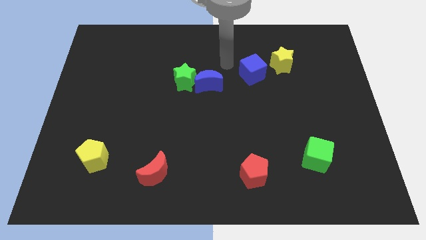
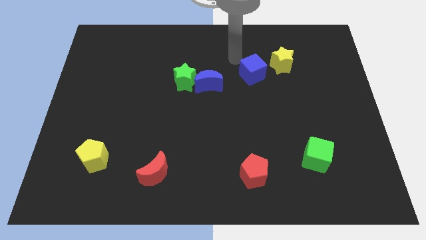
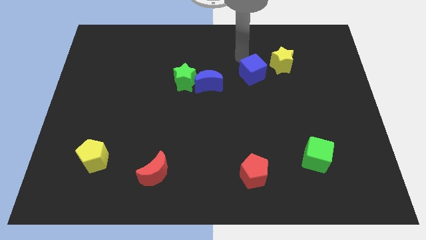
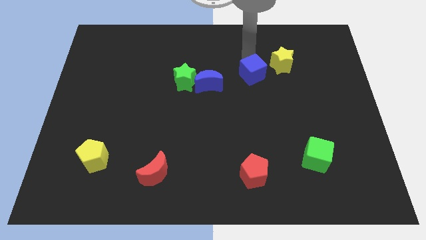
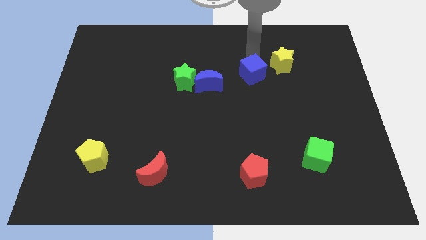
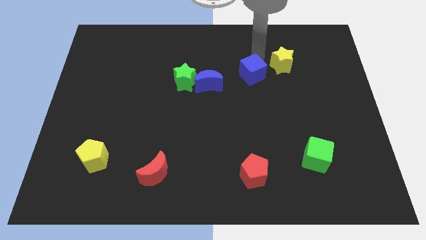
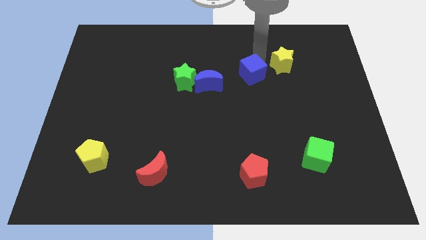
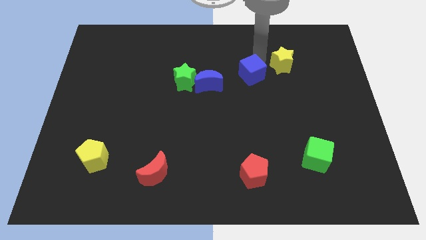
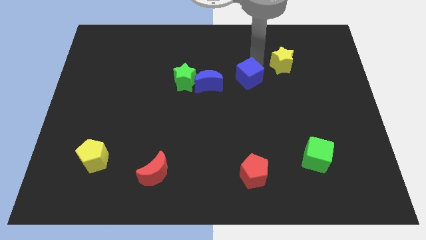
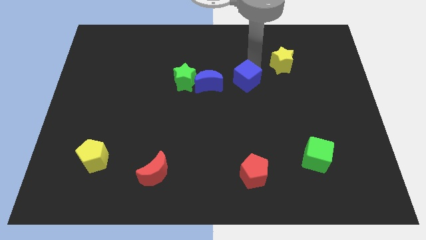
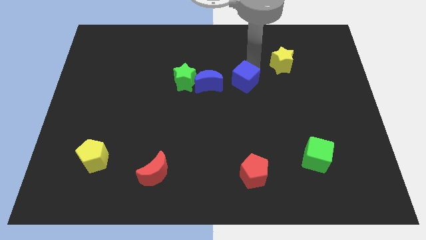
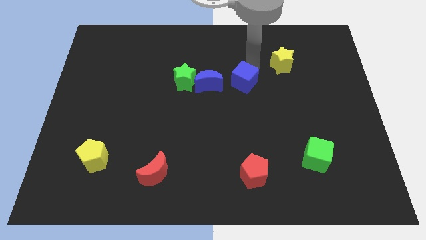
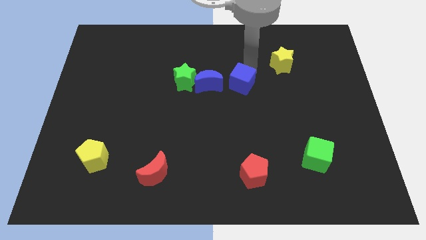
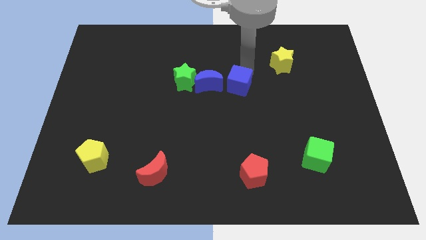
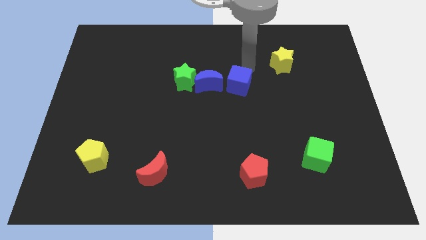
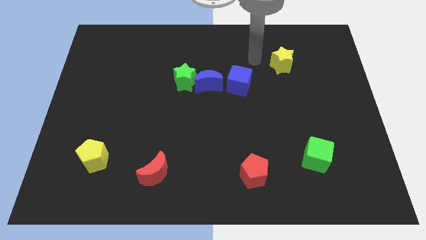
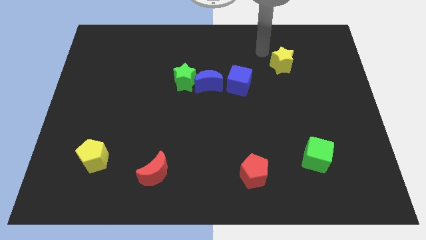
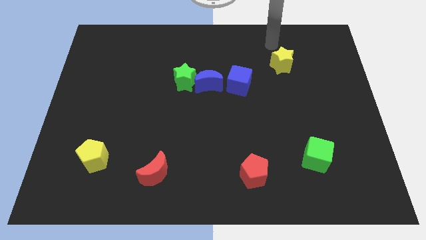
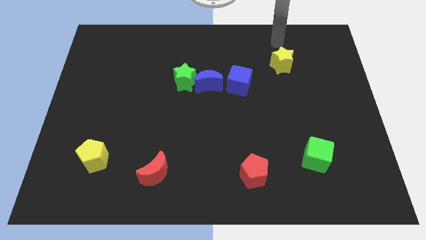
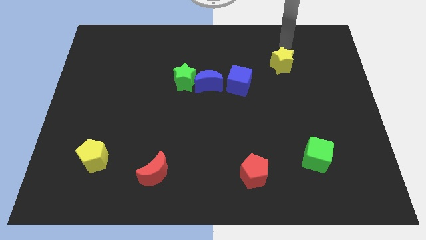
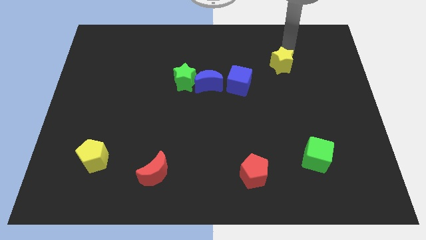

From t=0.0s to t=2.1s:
push the blue cube to the right of the blue moon

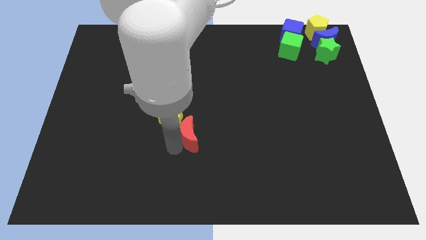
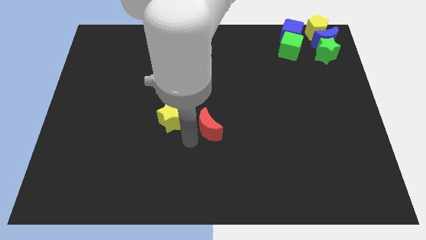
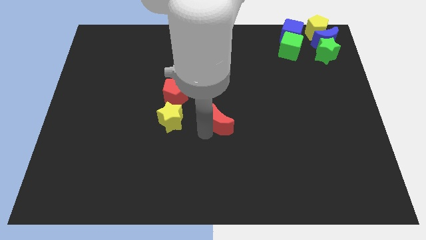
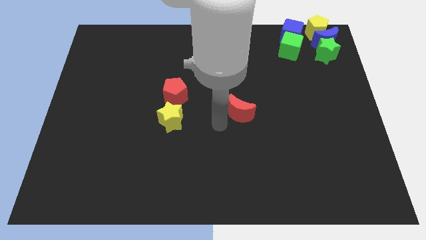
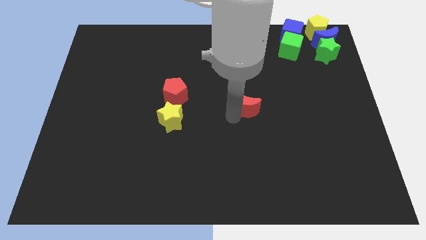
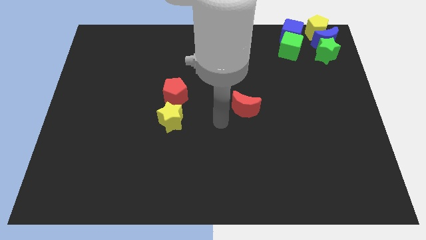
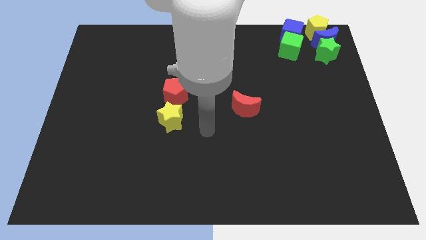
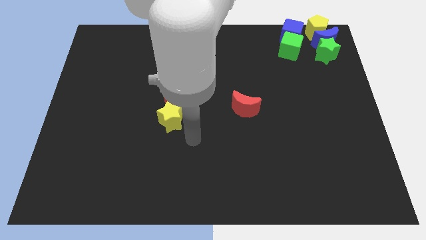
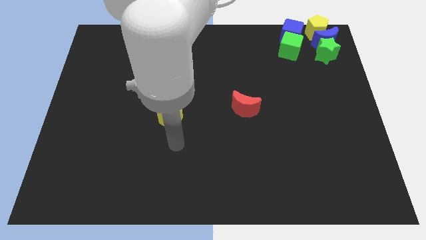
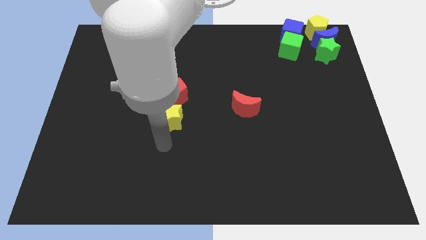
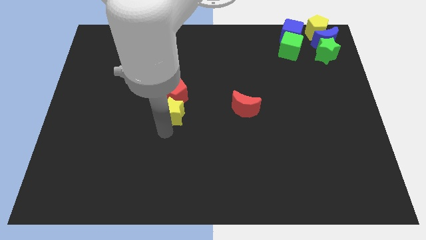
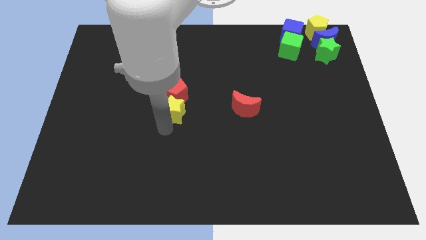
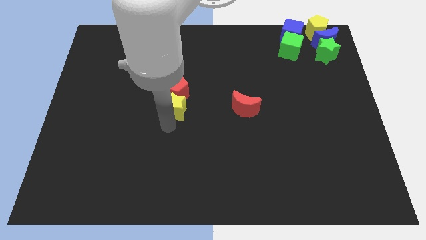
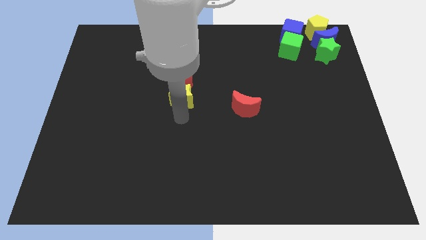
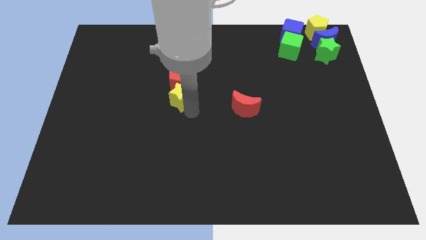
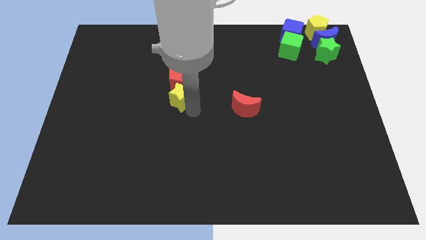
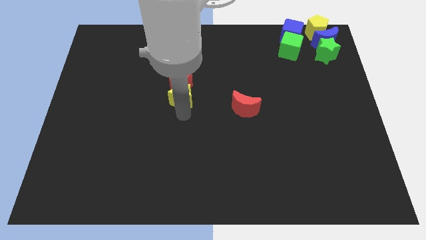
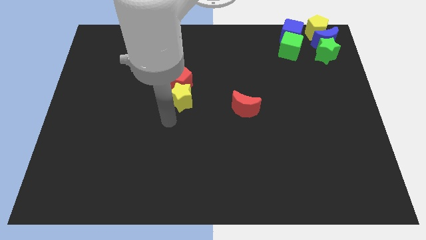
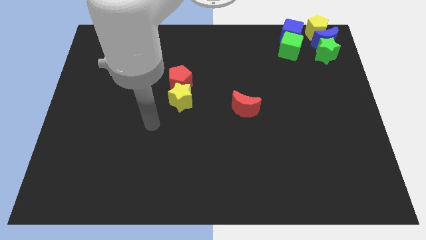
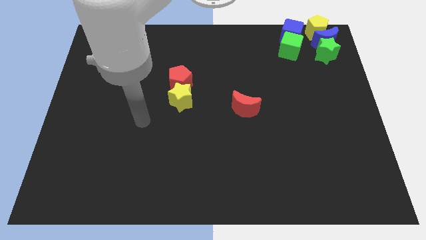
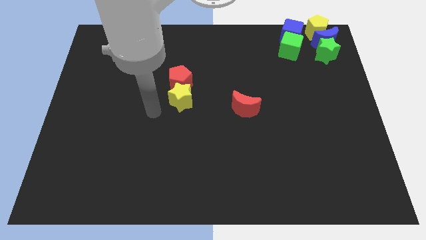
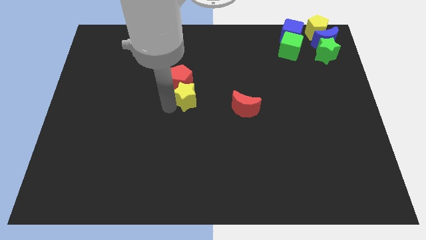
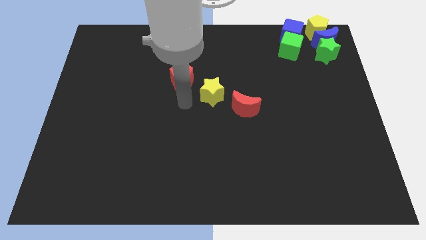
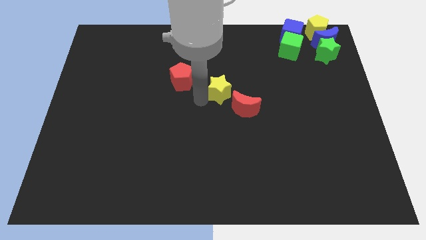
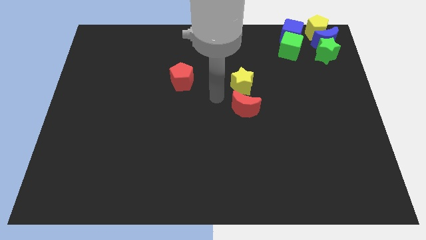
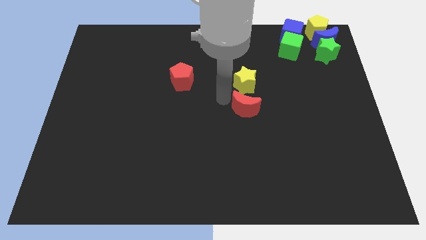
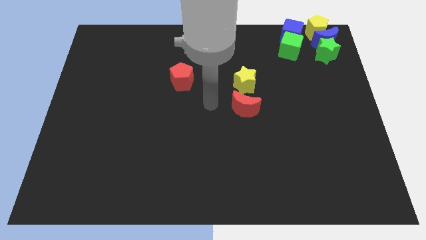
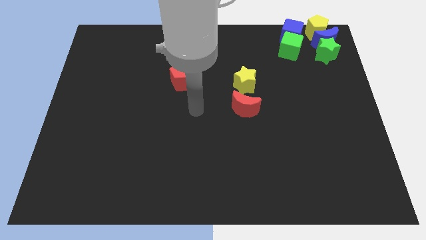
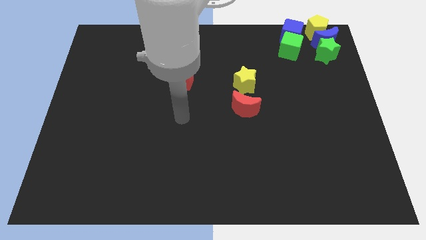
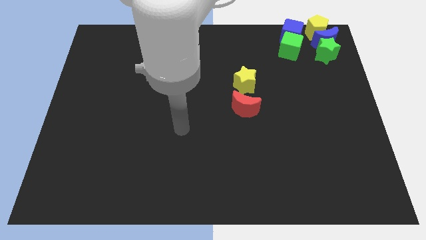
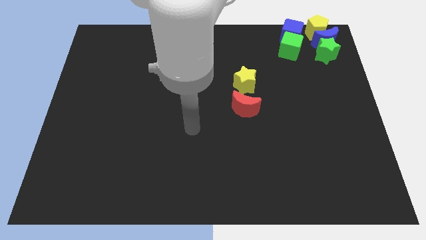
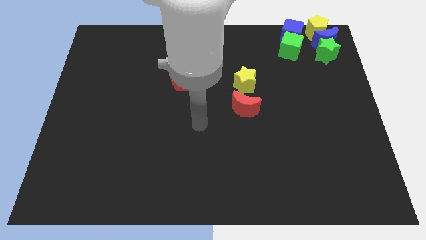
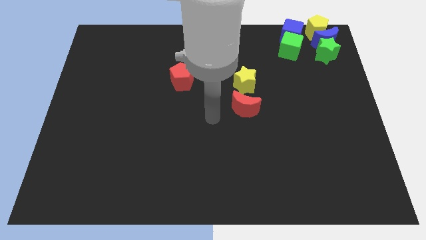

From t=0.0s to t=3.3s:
push the red crescent along with the yellow star to the right of the red pentagon

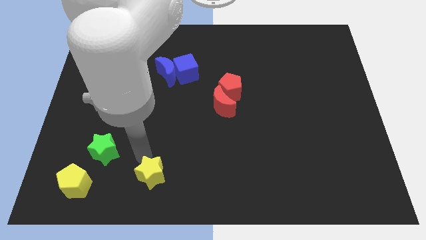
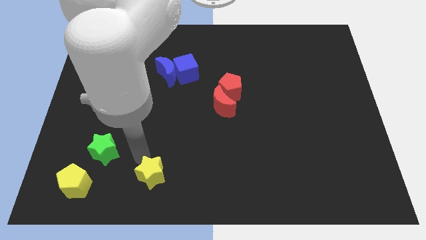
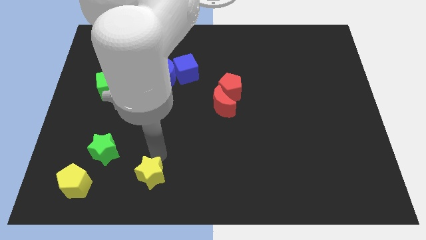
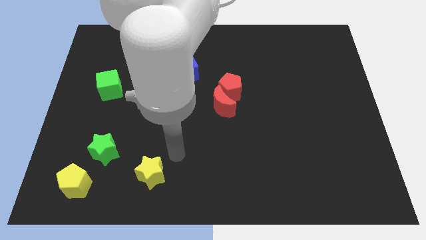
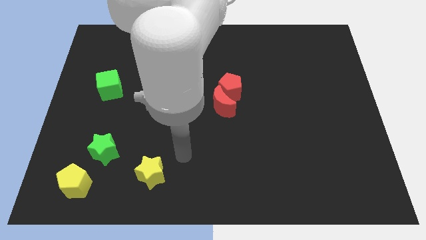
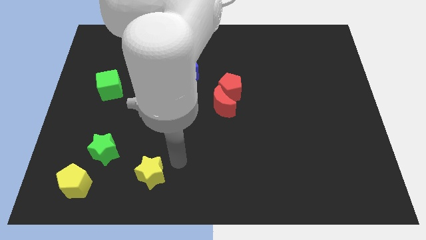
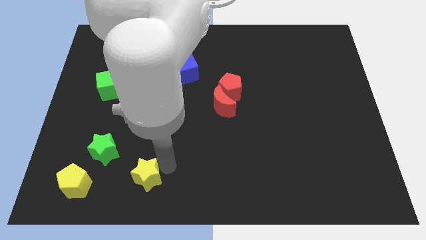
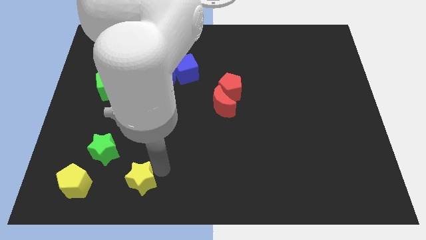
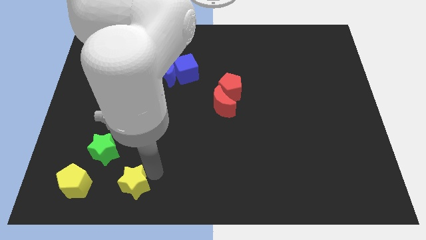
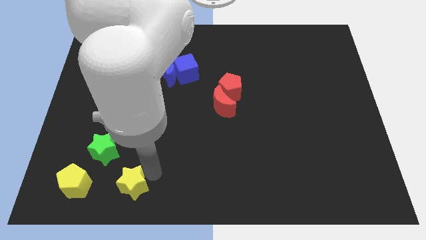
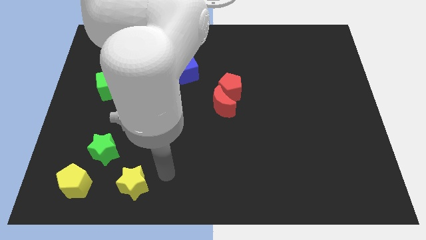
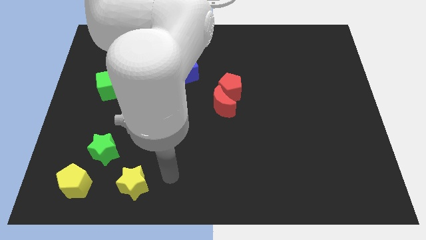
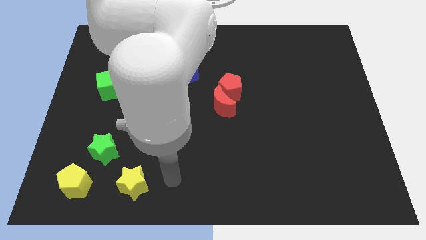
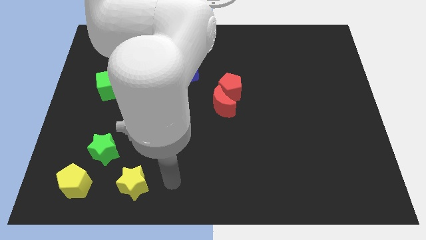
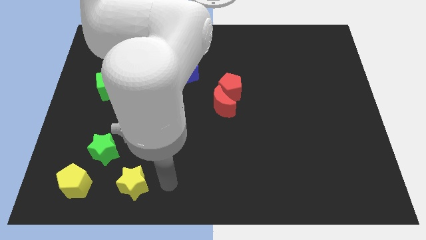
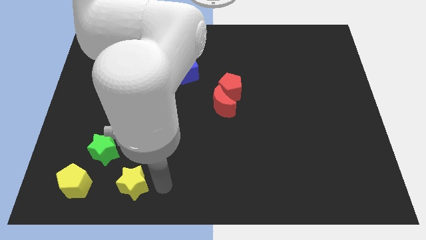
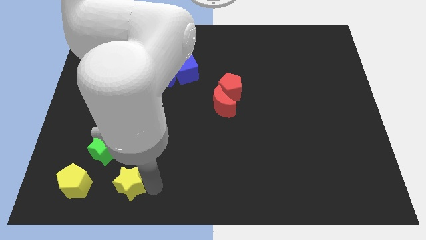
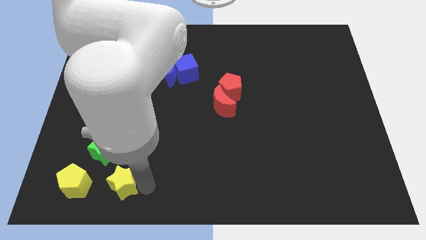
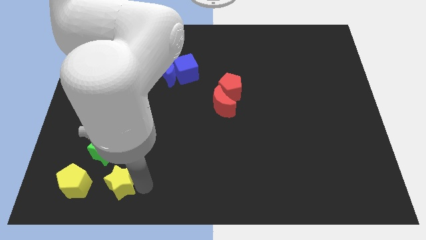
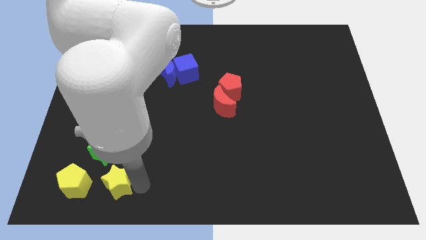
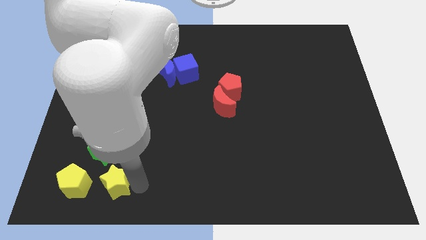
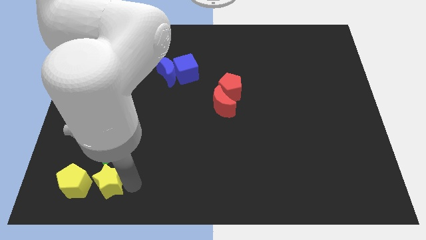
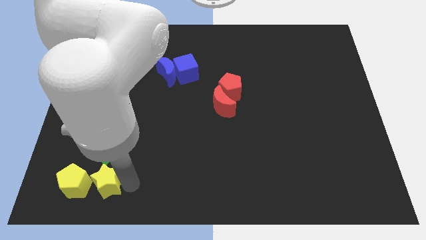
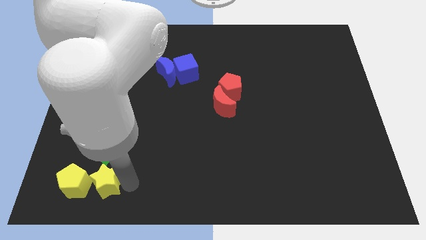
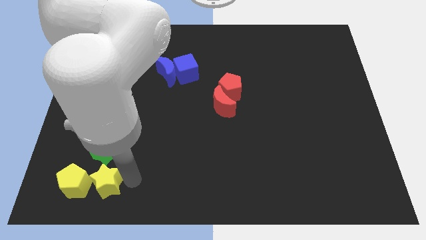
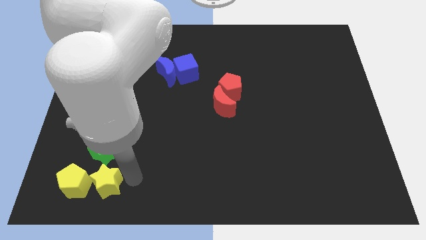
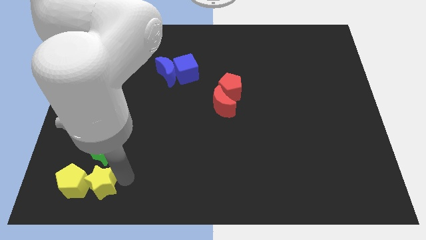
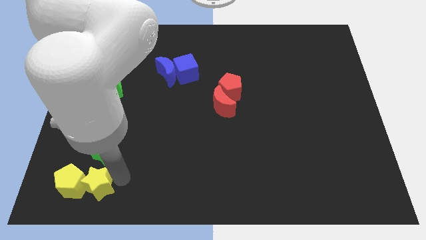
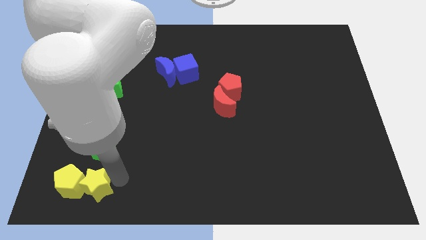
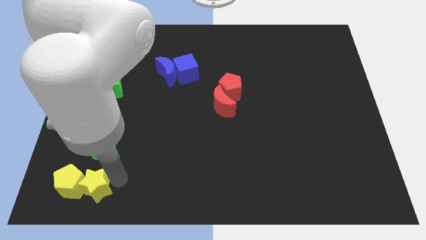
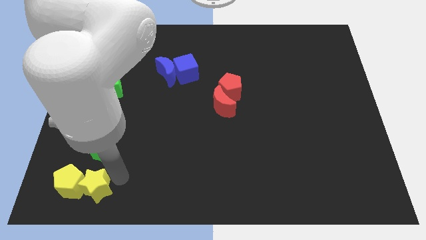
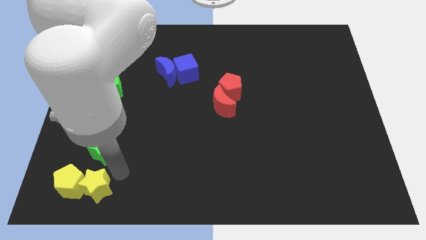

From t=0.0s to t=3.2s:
slide the yellow star to the right side of the yellow pentagon

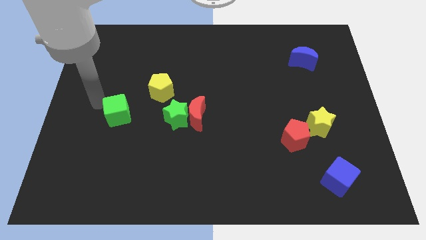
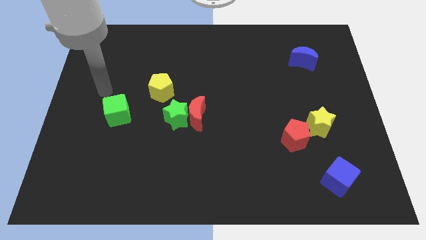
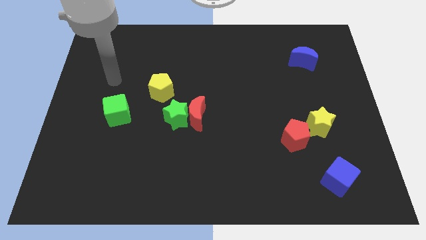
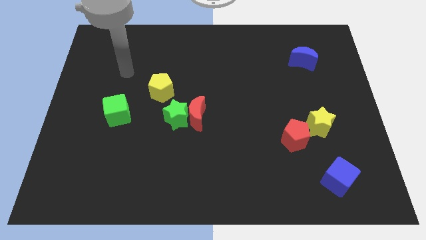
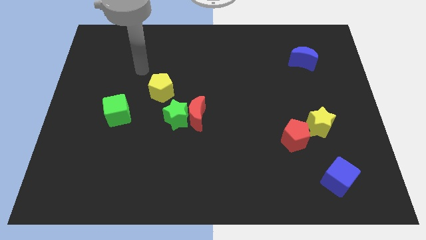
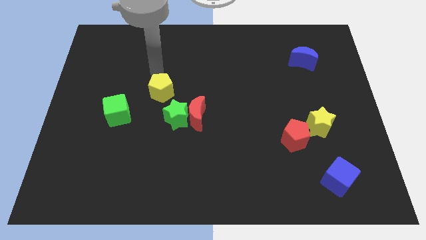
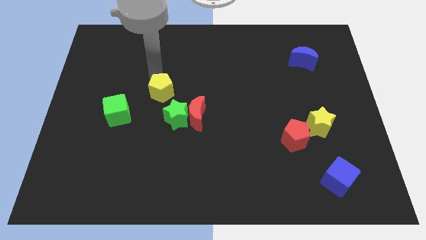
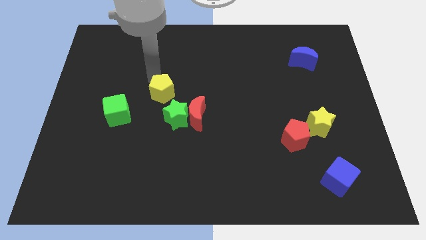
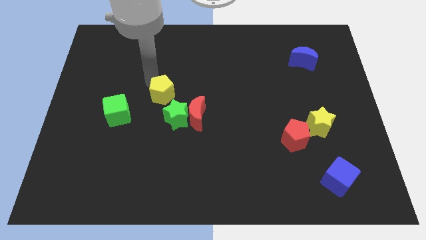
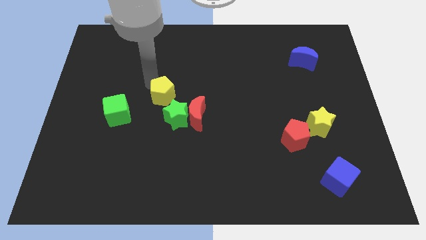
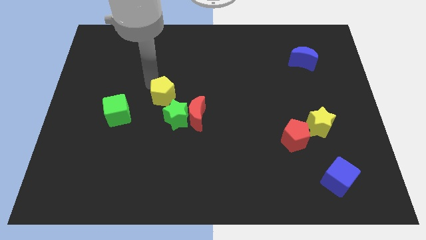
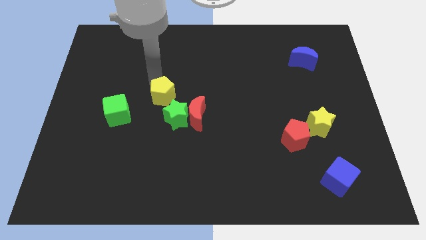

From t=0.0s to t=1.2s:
push the yellow pentagon toward the green star
